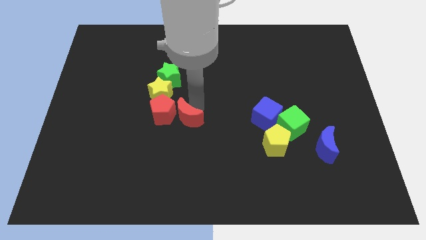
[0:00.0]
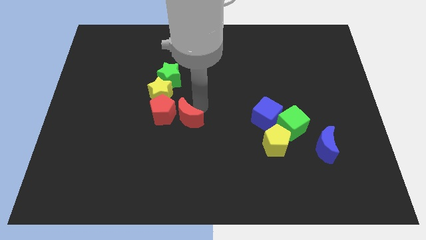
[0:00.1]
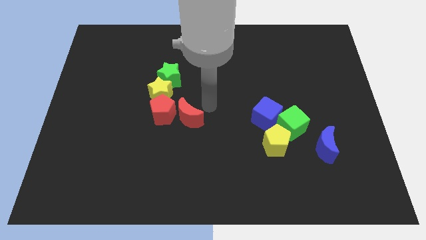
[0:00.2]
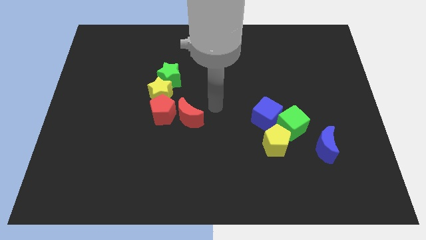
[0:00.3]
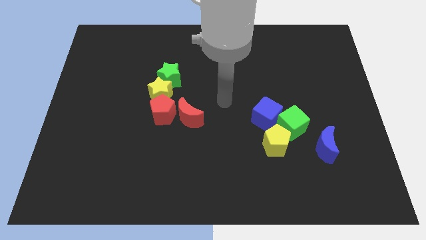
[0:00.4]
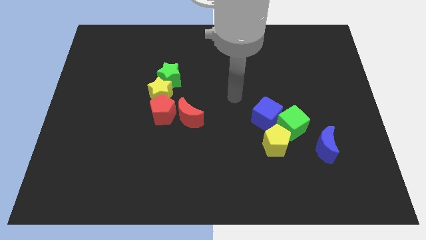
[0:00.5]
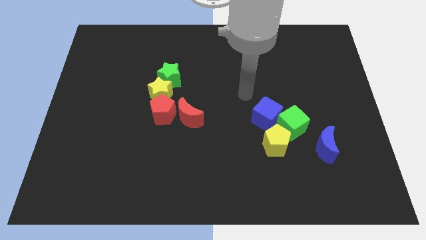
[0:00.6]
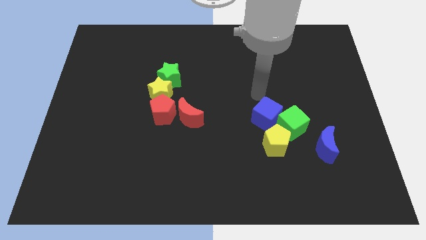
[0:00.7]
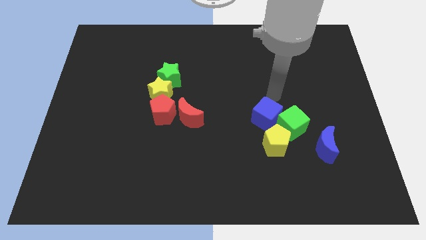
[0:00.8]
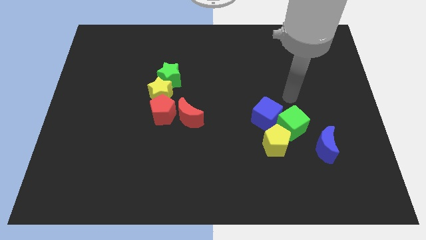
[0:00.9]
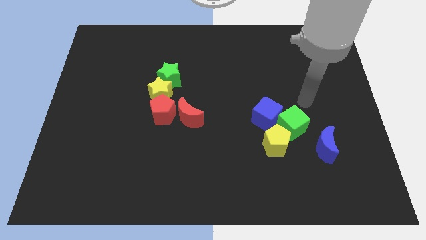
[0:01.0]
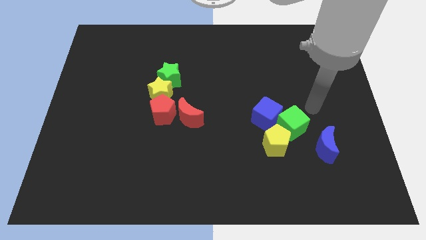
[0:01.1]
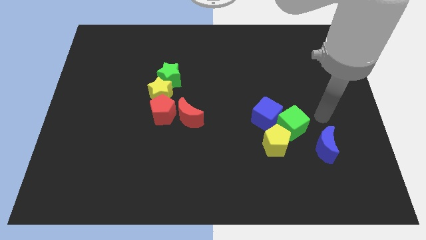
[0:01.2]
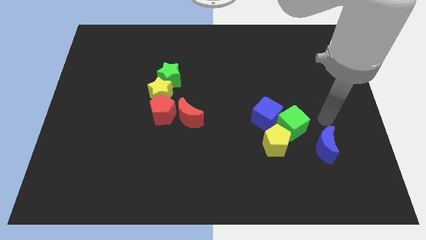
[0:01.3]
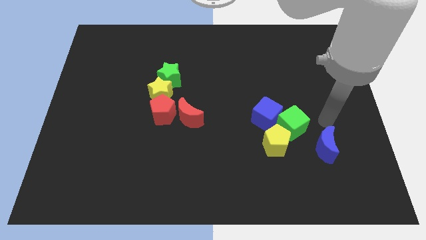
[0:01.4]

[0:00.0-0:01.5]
point your arm at the top side of the blue crescent

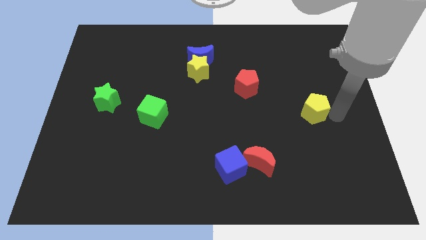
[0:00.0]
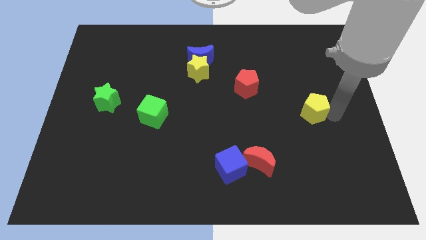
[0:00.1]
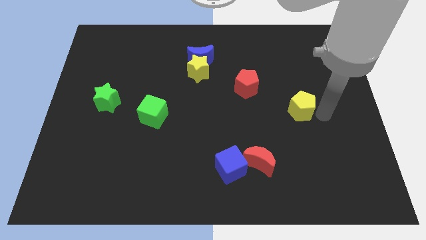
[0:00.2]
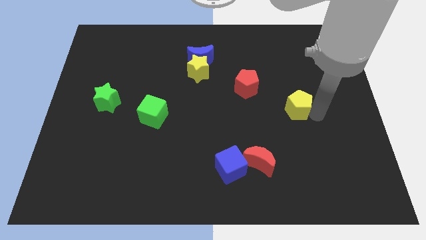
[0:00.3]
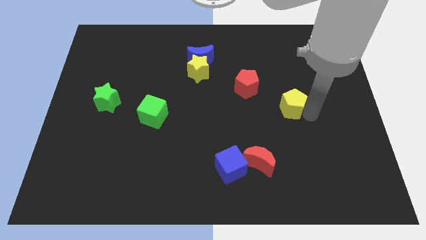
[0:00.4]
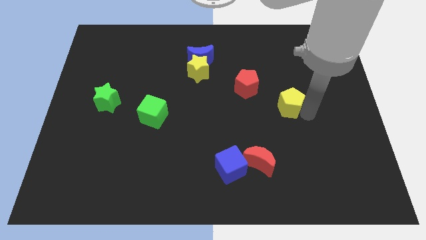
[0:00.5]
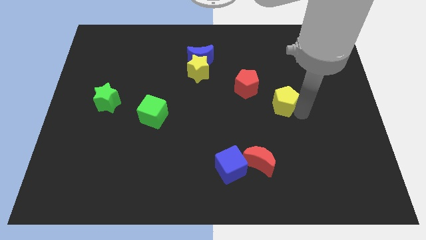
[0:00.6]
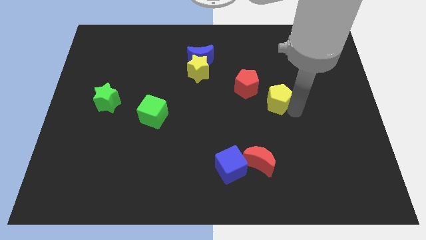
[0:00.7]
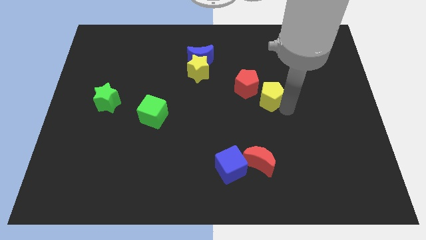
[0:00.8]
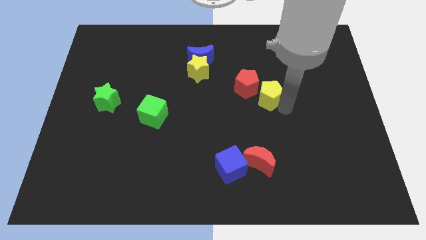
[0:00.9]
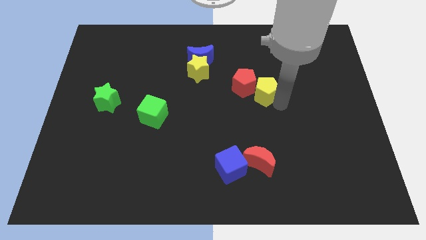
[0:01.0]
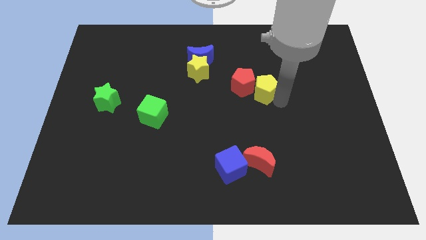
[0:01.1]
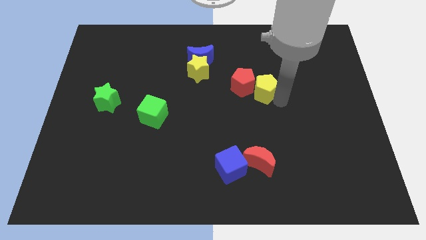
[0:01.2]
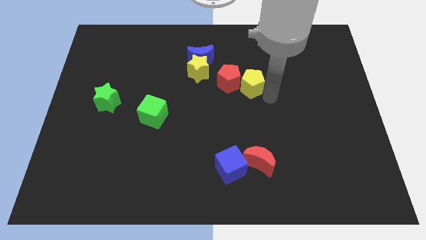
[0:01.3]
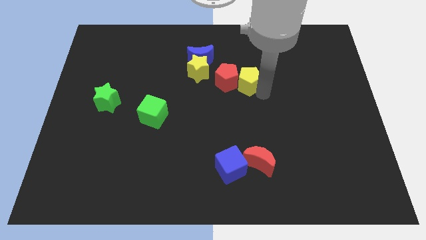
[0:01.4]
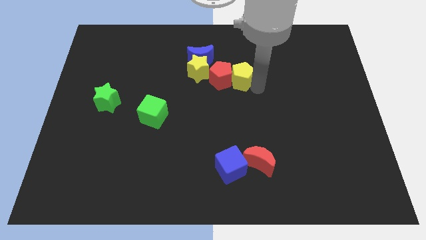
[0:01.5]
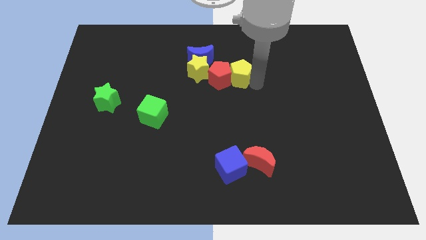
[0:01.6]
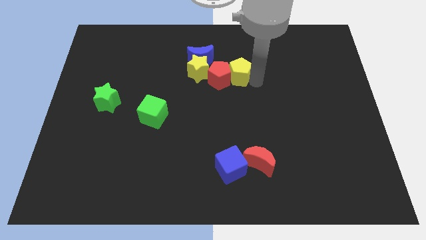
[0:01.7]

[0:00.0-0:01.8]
move yellow pentagon close to red pentagon

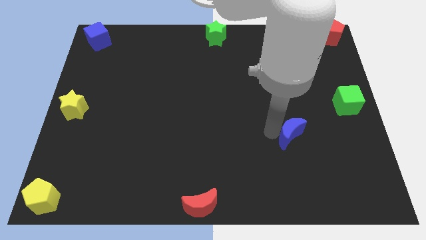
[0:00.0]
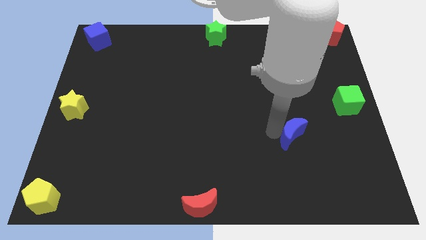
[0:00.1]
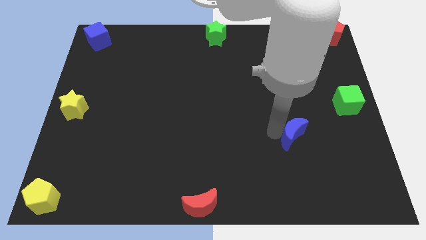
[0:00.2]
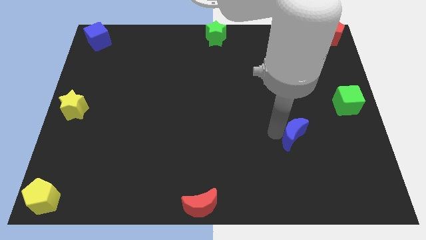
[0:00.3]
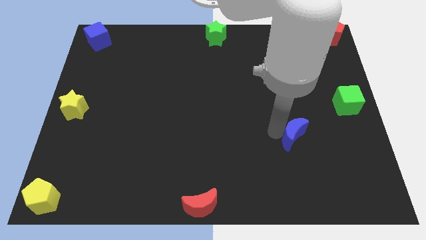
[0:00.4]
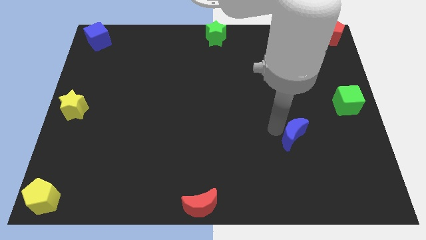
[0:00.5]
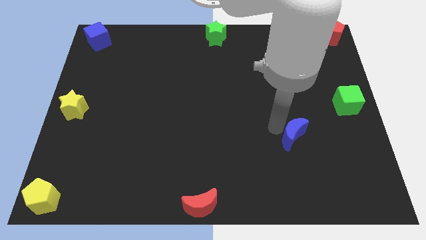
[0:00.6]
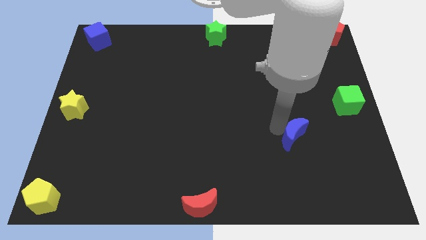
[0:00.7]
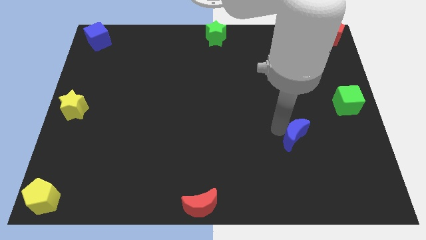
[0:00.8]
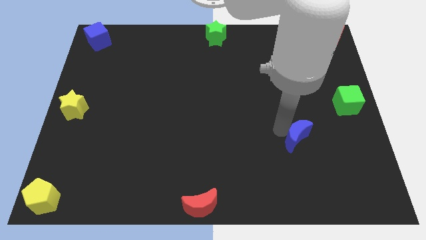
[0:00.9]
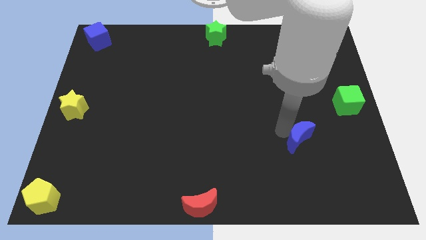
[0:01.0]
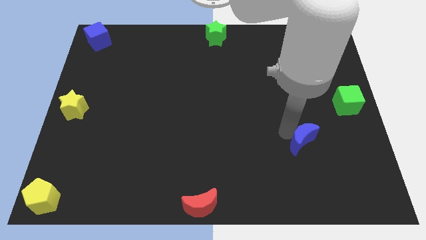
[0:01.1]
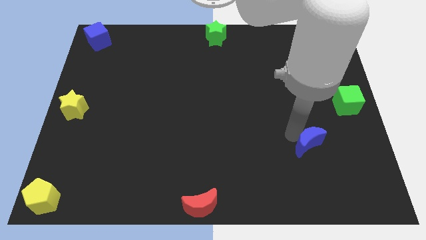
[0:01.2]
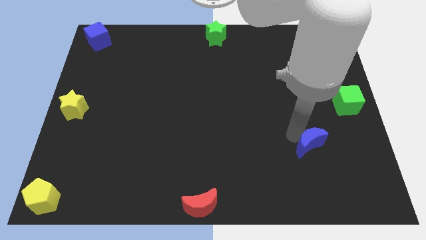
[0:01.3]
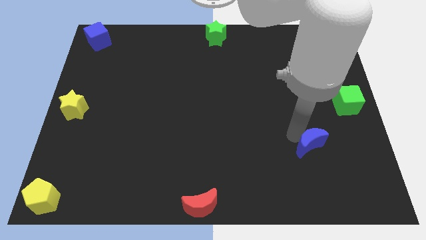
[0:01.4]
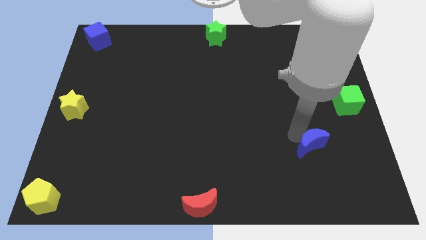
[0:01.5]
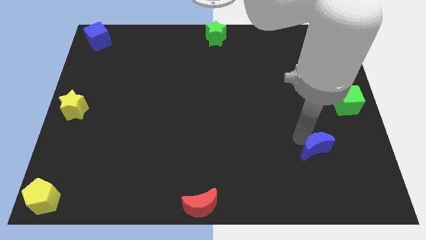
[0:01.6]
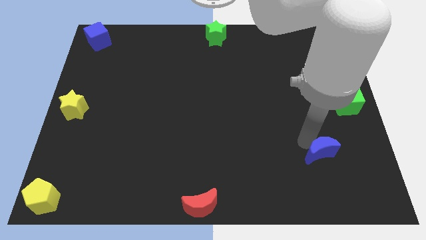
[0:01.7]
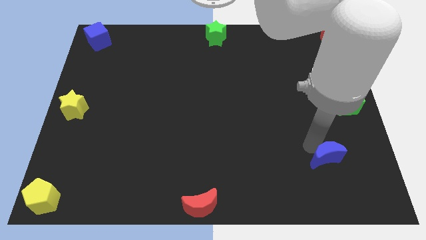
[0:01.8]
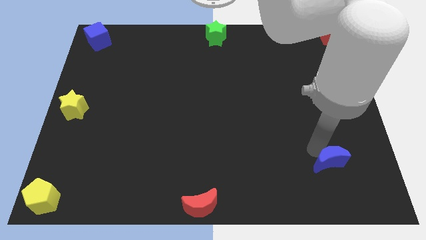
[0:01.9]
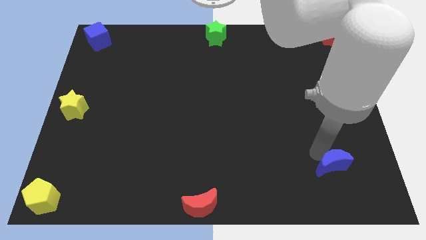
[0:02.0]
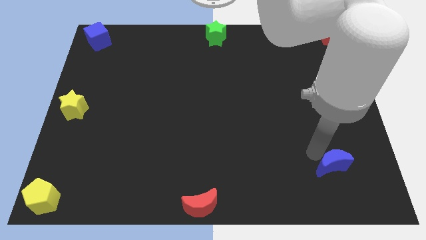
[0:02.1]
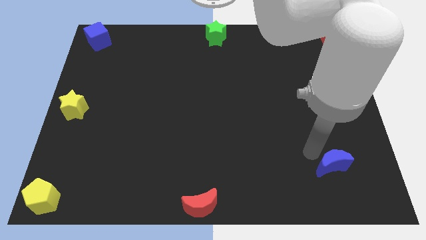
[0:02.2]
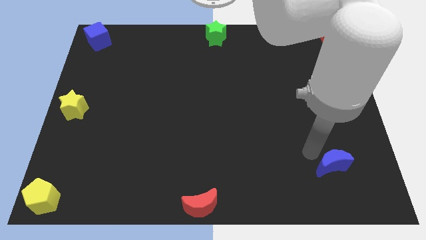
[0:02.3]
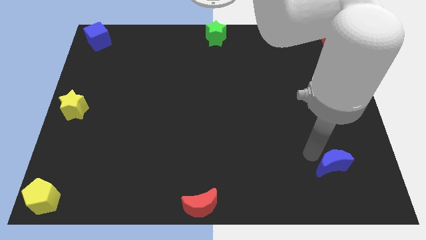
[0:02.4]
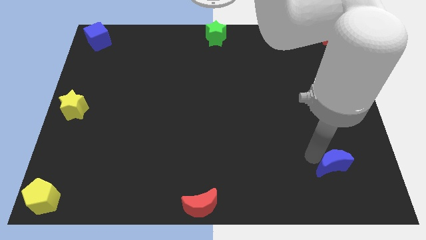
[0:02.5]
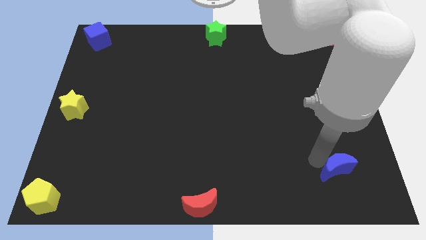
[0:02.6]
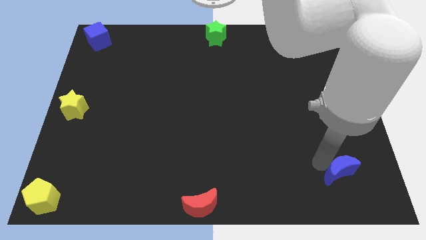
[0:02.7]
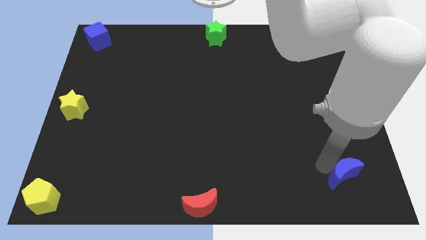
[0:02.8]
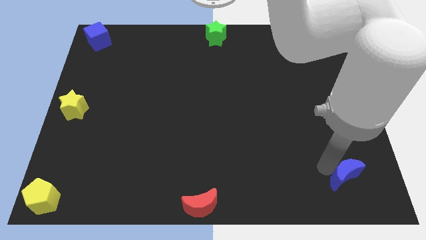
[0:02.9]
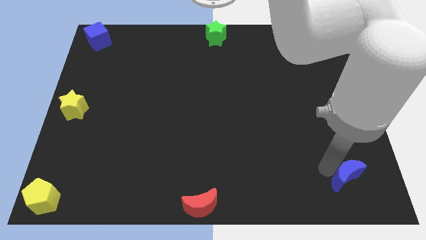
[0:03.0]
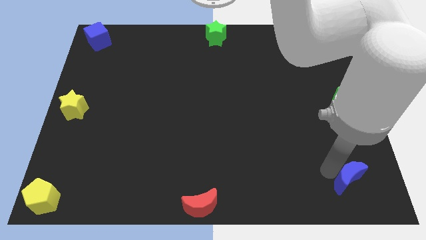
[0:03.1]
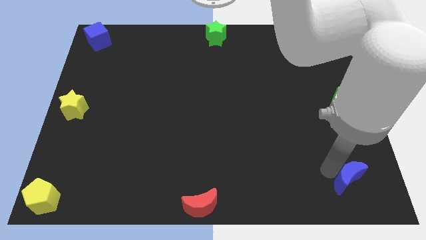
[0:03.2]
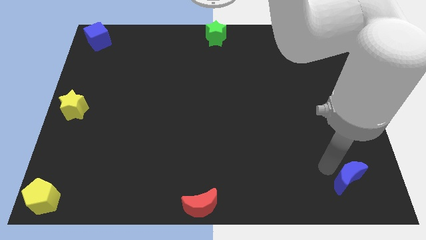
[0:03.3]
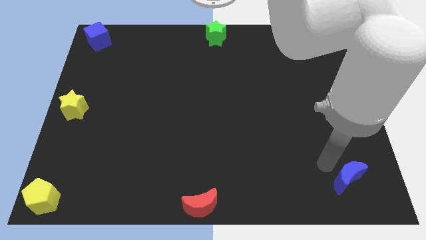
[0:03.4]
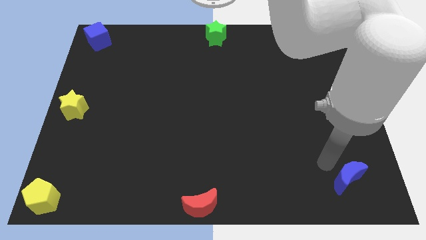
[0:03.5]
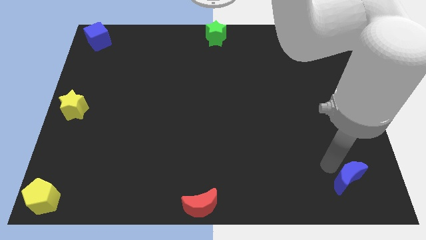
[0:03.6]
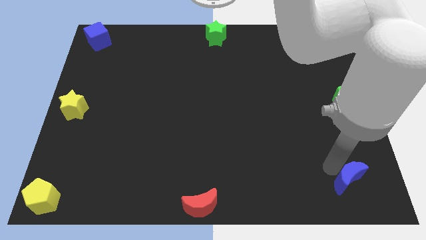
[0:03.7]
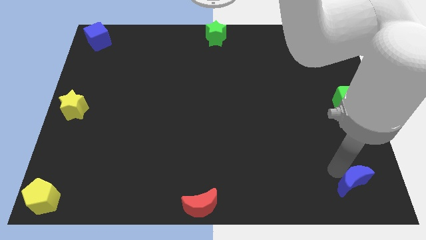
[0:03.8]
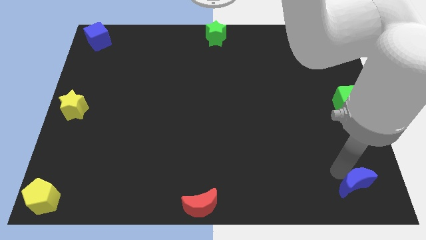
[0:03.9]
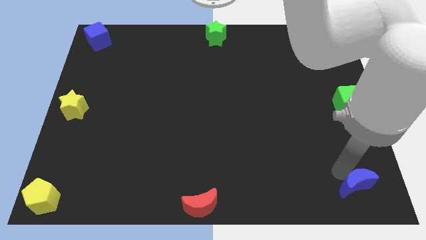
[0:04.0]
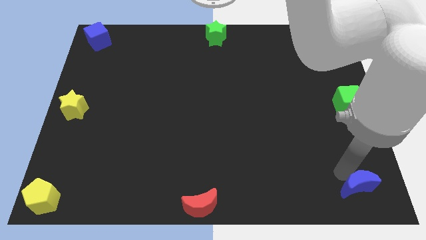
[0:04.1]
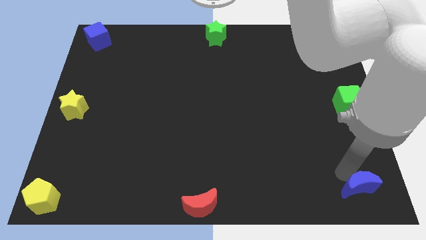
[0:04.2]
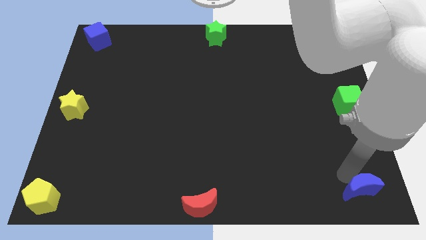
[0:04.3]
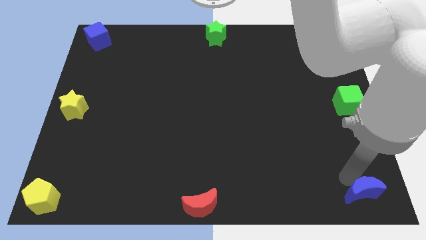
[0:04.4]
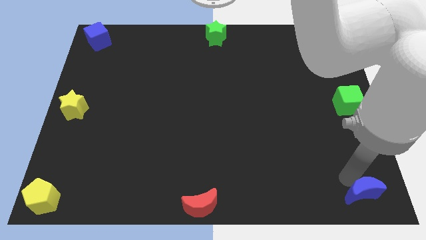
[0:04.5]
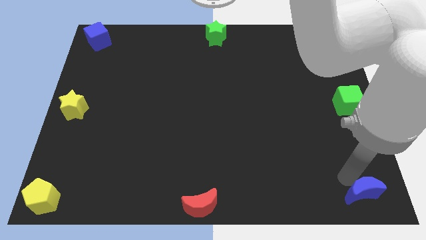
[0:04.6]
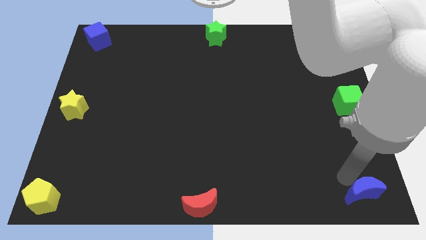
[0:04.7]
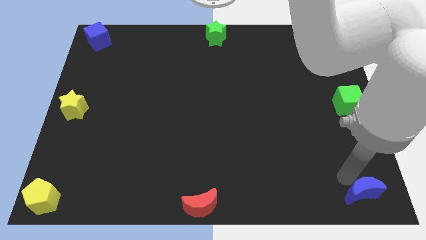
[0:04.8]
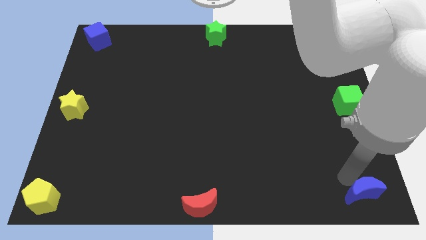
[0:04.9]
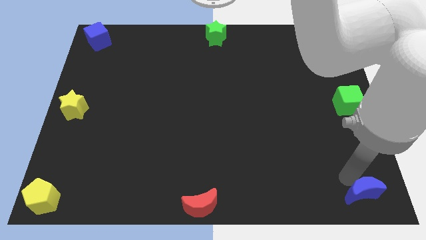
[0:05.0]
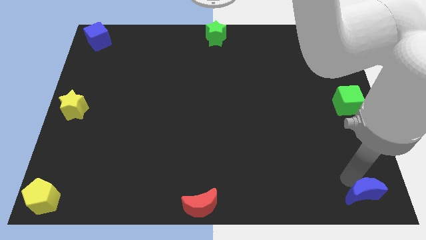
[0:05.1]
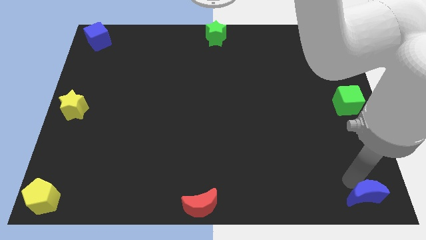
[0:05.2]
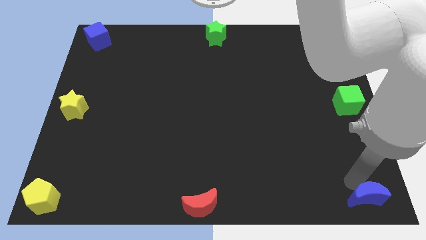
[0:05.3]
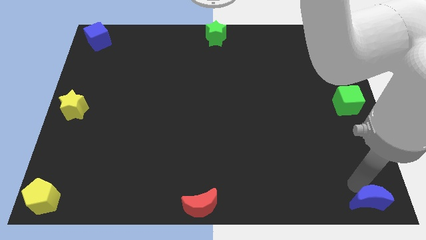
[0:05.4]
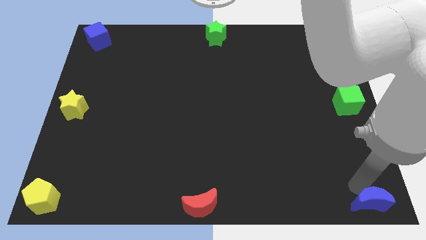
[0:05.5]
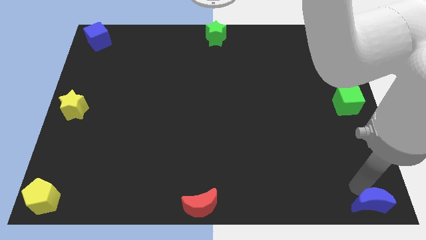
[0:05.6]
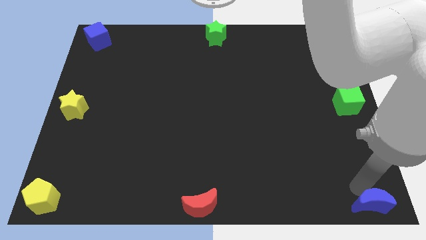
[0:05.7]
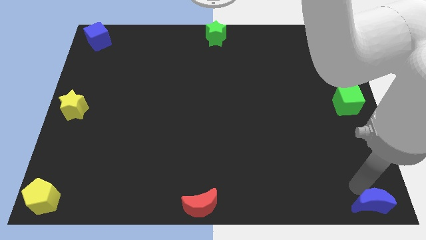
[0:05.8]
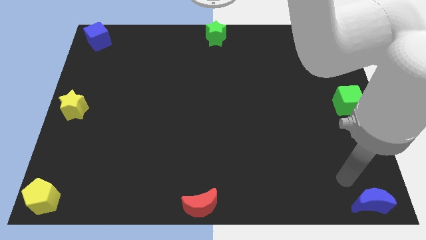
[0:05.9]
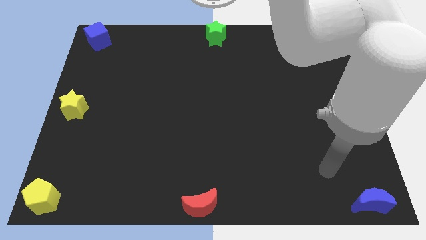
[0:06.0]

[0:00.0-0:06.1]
move the blue crescent to the bottom right corner of the board
